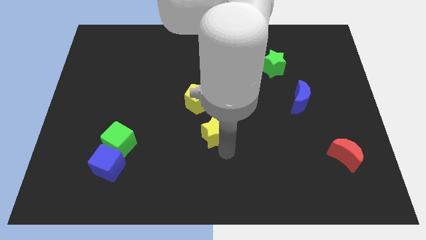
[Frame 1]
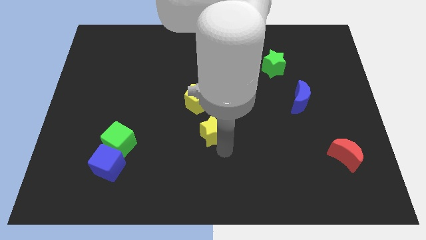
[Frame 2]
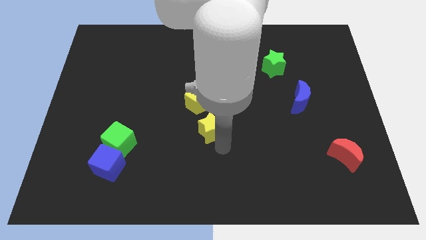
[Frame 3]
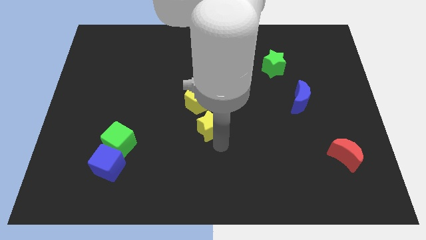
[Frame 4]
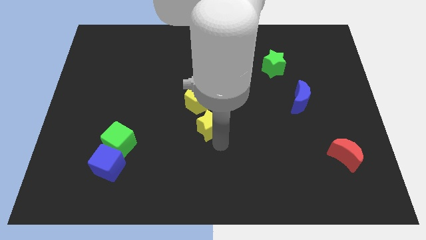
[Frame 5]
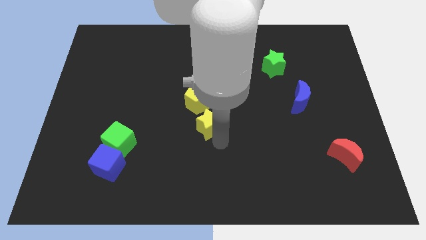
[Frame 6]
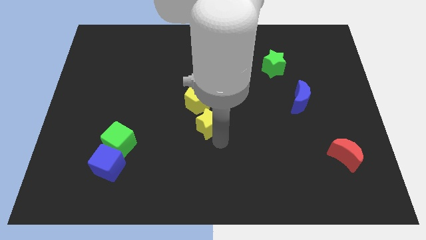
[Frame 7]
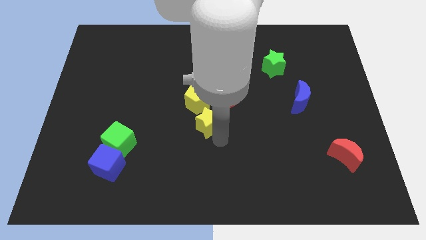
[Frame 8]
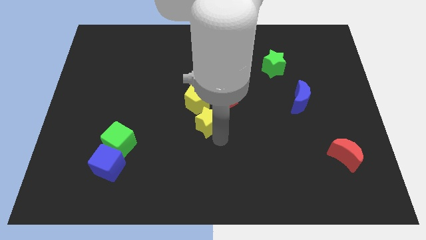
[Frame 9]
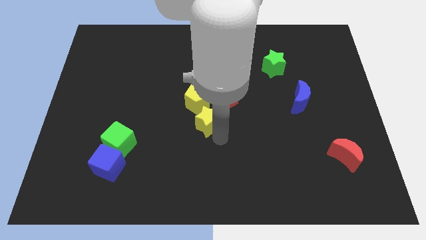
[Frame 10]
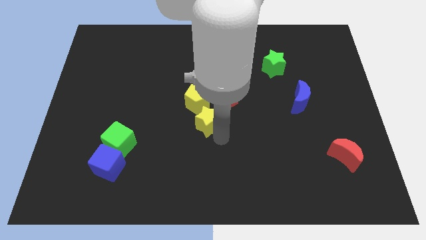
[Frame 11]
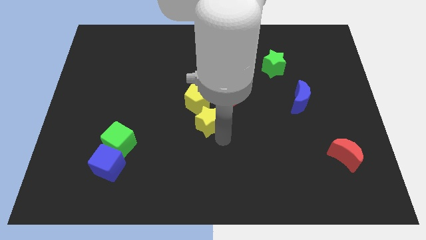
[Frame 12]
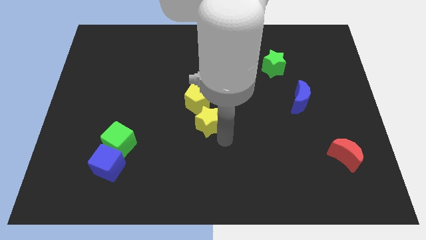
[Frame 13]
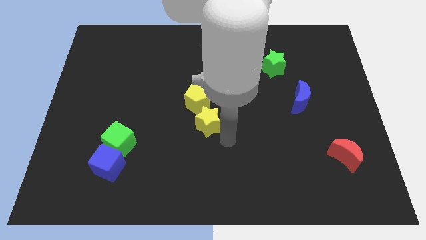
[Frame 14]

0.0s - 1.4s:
place yellow star to the bottom of yellow pentagon

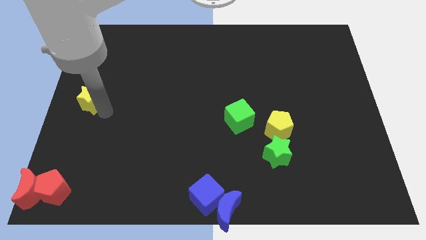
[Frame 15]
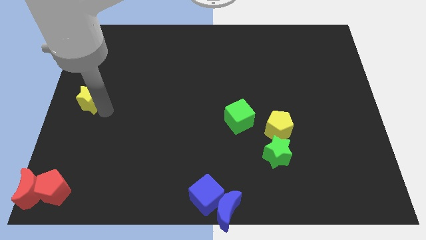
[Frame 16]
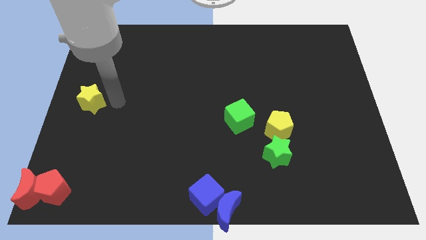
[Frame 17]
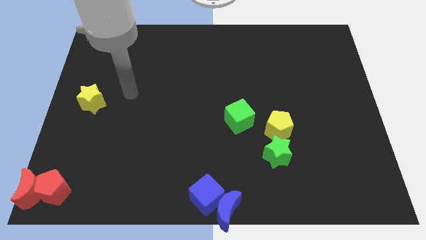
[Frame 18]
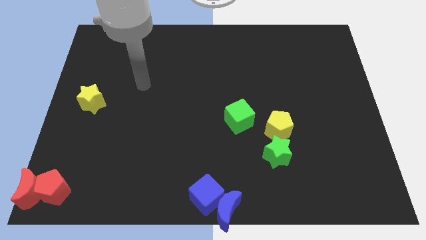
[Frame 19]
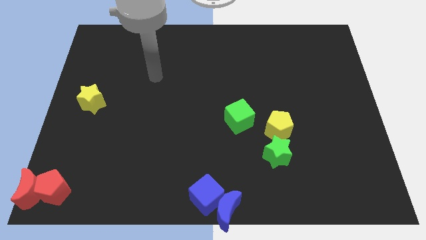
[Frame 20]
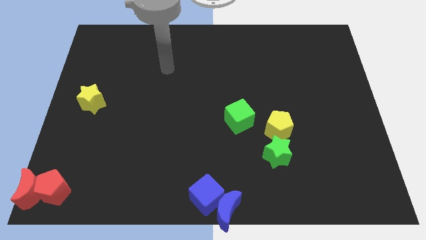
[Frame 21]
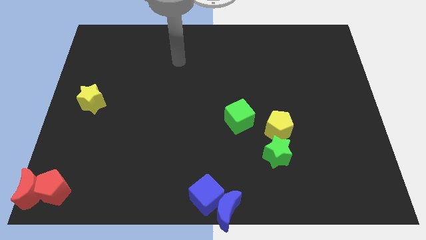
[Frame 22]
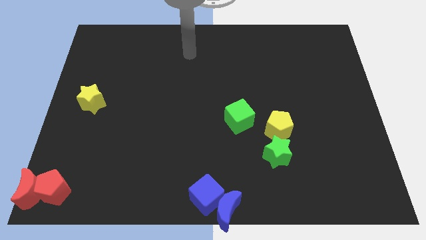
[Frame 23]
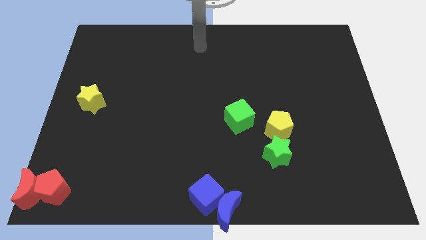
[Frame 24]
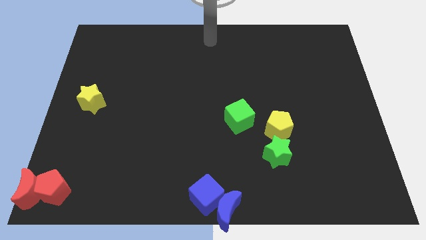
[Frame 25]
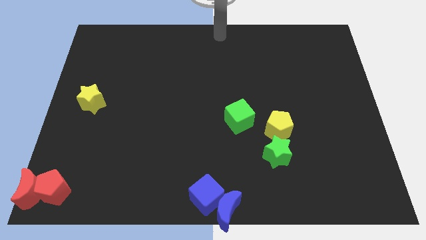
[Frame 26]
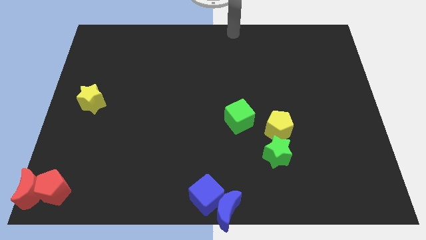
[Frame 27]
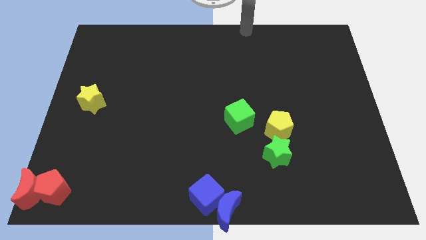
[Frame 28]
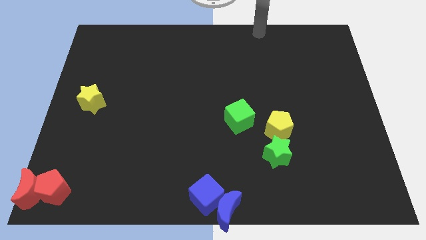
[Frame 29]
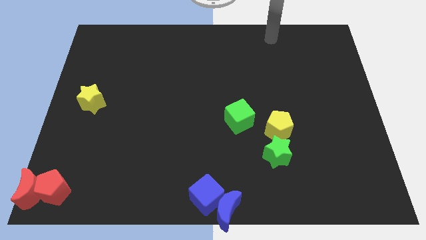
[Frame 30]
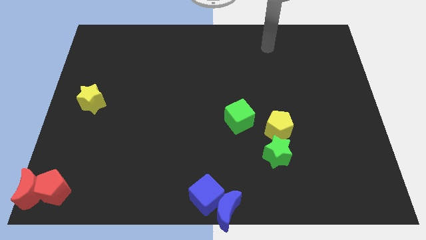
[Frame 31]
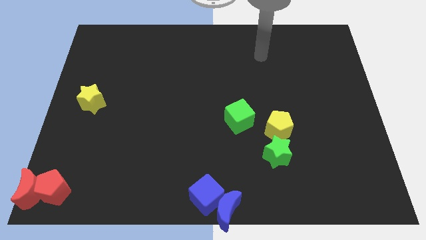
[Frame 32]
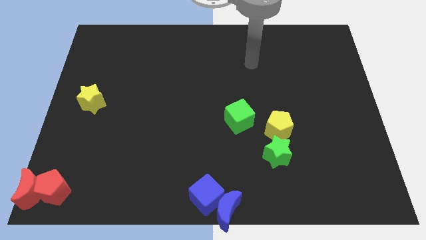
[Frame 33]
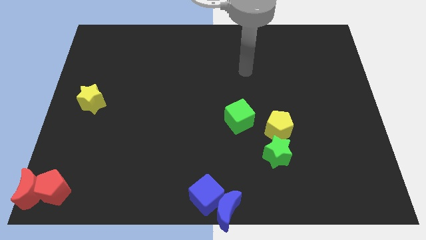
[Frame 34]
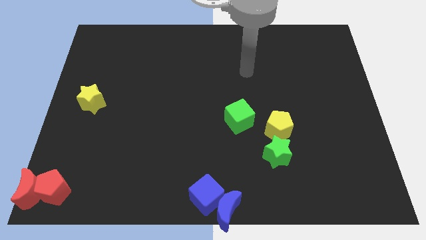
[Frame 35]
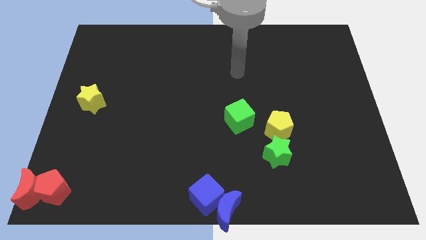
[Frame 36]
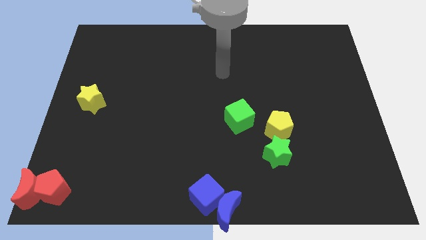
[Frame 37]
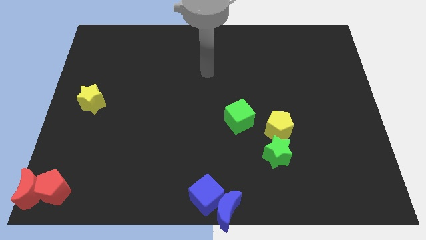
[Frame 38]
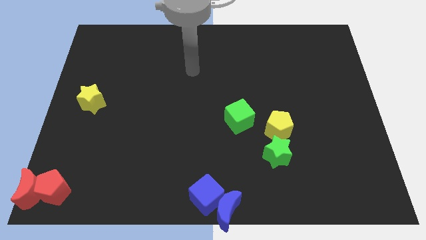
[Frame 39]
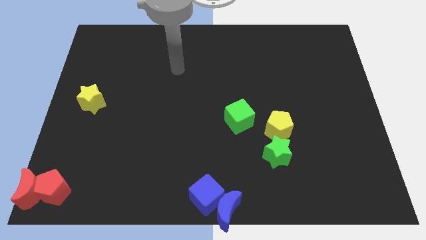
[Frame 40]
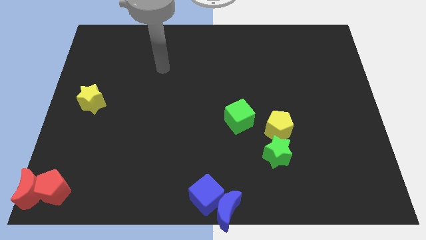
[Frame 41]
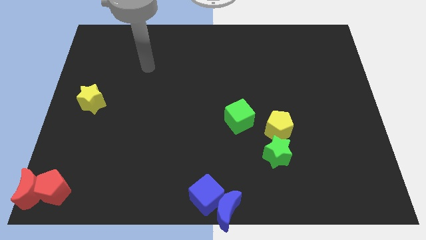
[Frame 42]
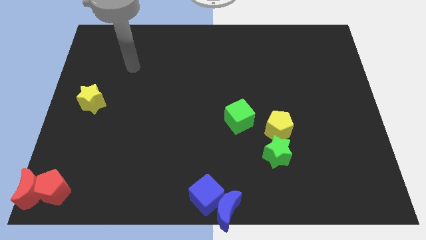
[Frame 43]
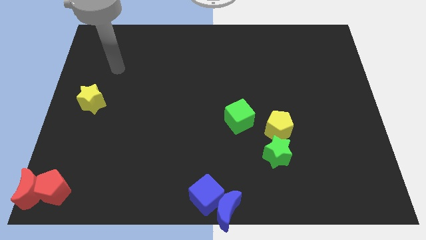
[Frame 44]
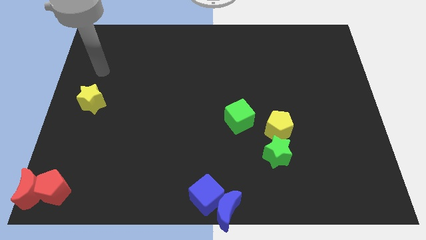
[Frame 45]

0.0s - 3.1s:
point your arm on top of the yellow star

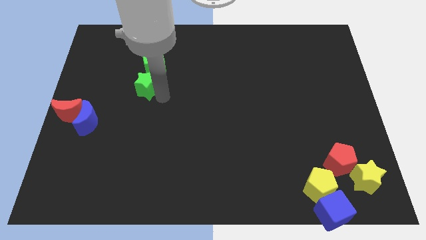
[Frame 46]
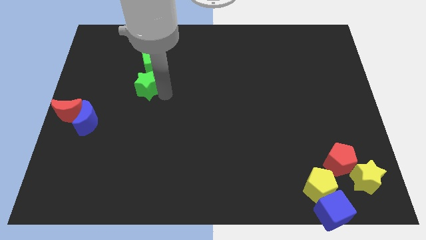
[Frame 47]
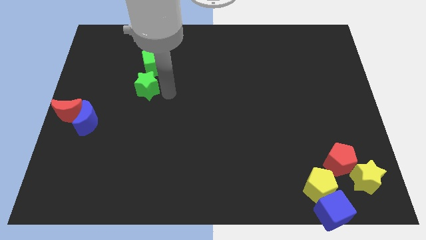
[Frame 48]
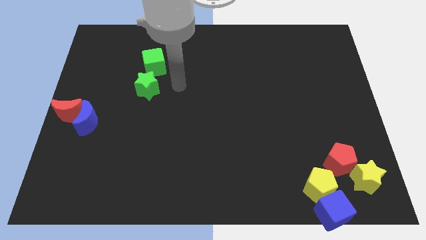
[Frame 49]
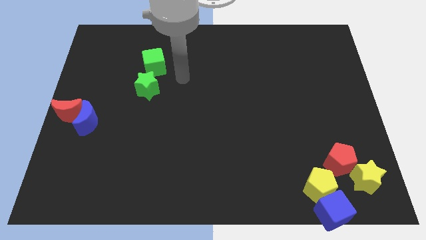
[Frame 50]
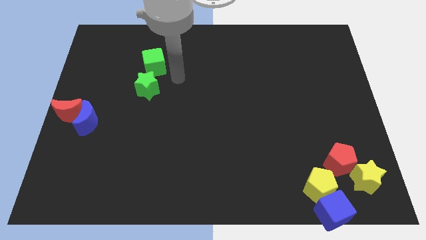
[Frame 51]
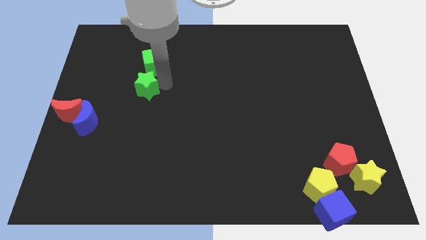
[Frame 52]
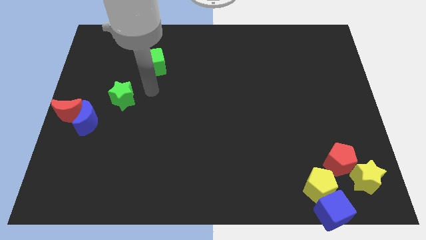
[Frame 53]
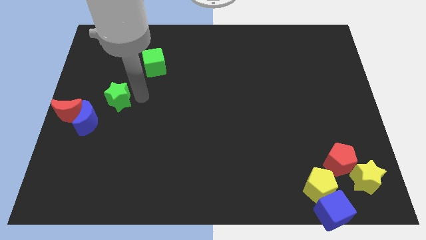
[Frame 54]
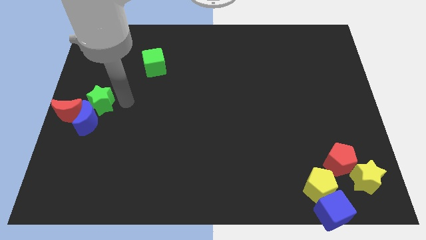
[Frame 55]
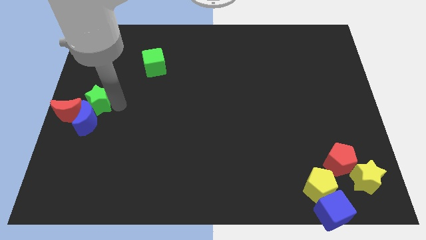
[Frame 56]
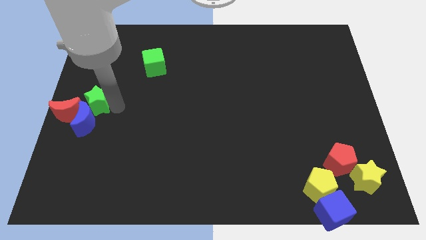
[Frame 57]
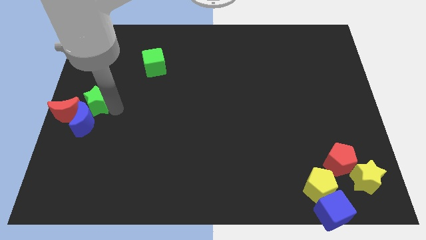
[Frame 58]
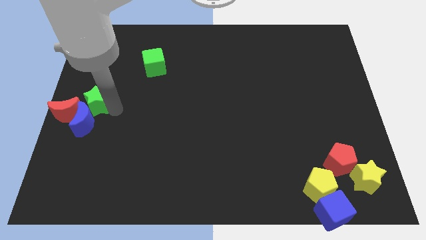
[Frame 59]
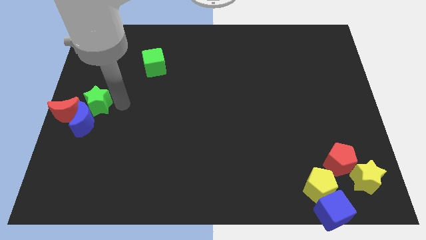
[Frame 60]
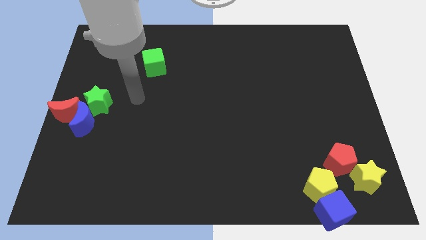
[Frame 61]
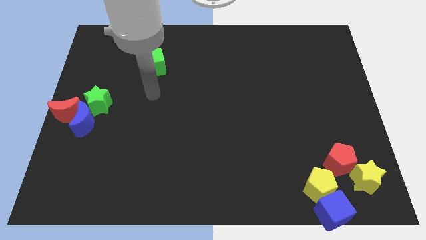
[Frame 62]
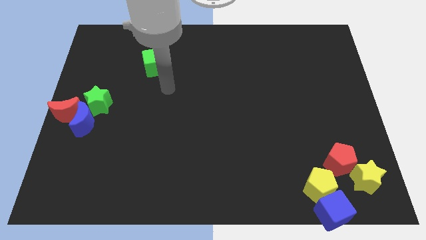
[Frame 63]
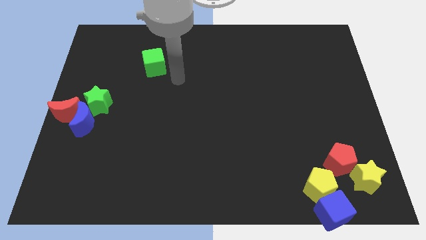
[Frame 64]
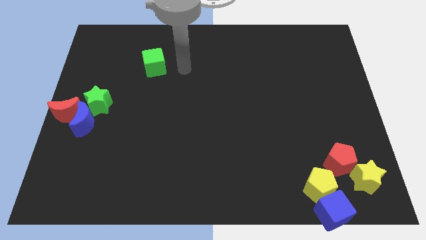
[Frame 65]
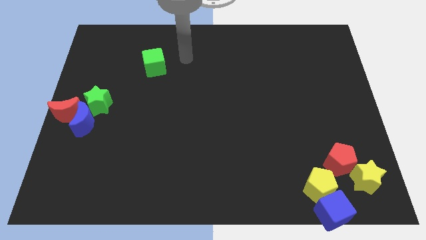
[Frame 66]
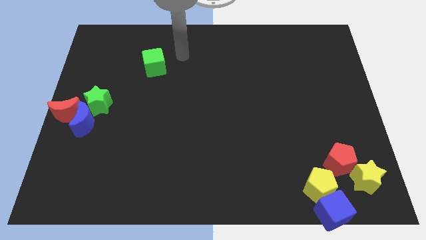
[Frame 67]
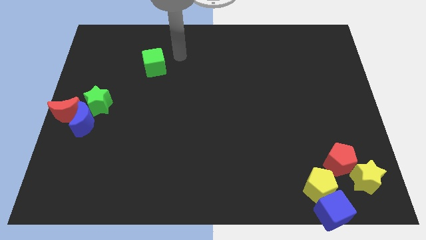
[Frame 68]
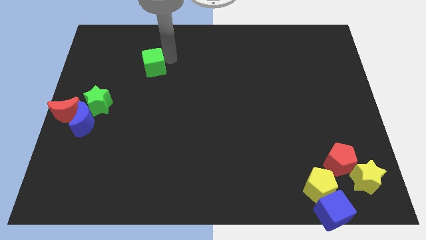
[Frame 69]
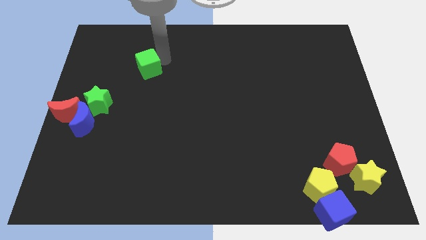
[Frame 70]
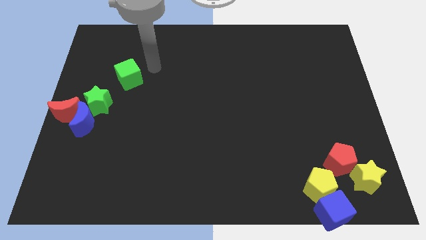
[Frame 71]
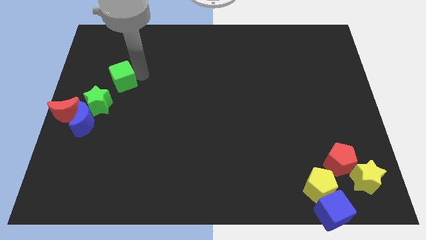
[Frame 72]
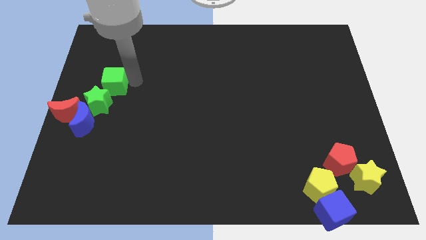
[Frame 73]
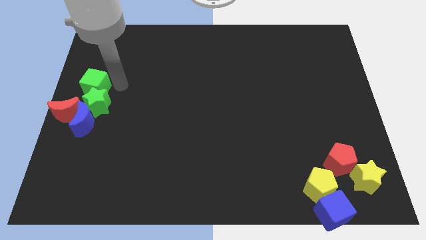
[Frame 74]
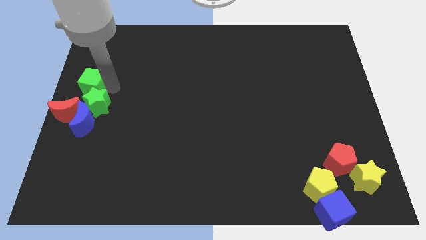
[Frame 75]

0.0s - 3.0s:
move the green blocks to the middle left of the board

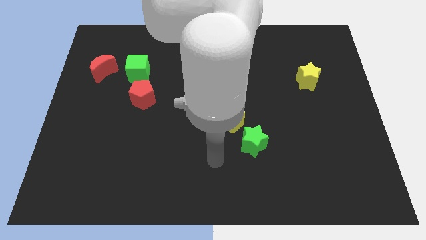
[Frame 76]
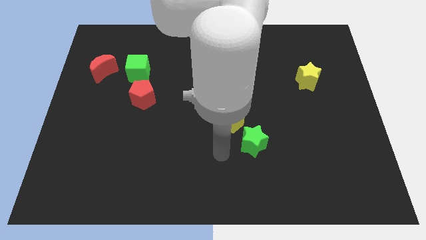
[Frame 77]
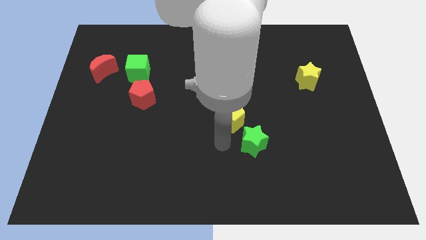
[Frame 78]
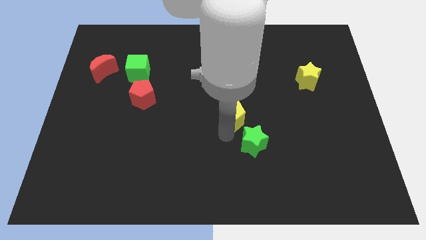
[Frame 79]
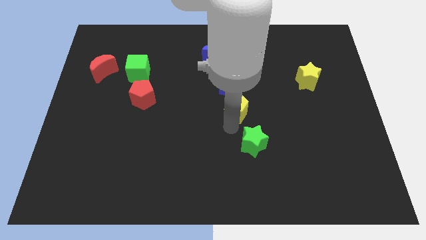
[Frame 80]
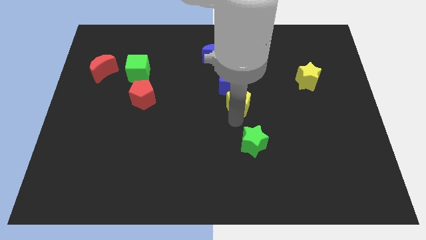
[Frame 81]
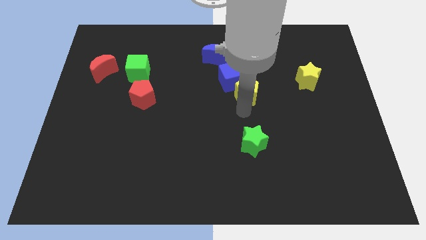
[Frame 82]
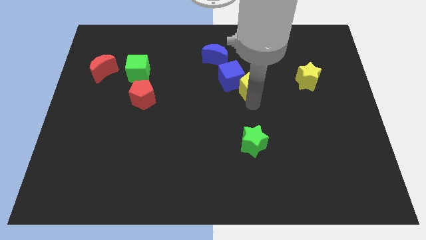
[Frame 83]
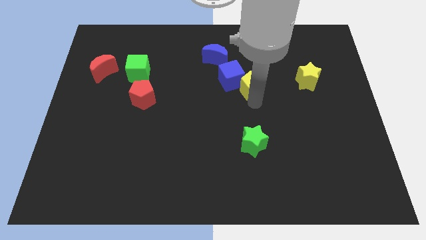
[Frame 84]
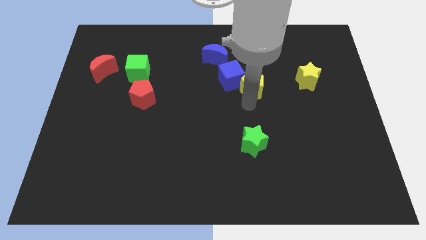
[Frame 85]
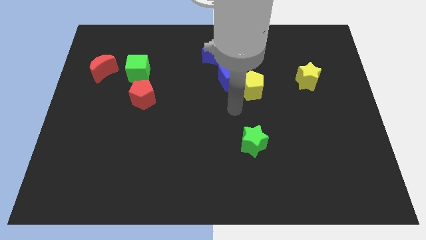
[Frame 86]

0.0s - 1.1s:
push the yellow pentagon into the blue cube

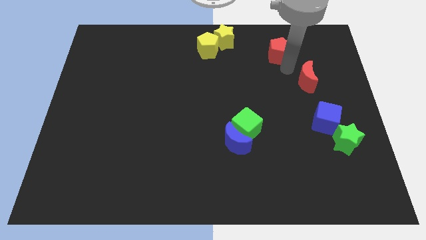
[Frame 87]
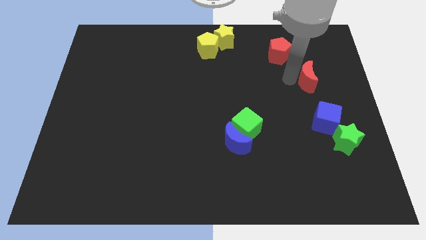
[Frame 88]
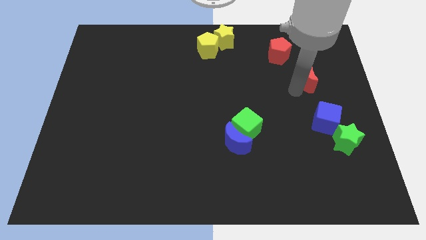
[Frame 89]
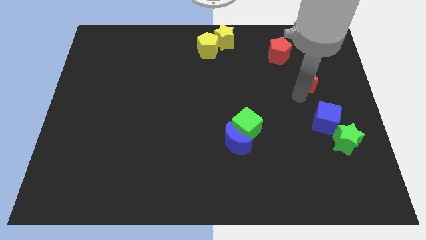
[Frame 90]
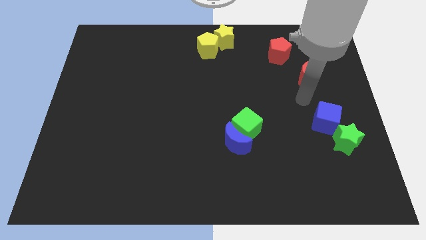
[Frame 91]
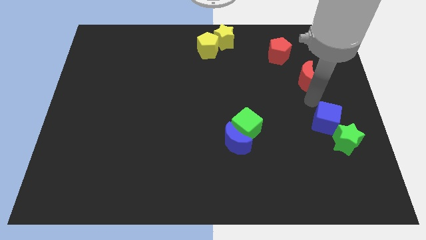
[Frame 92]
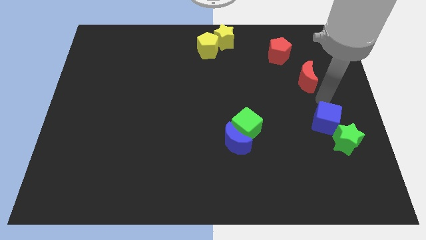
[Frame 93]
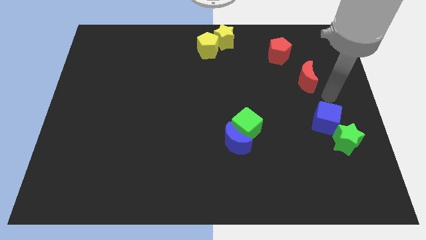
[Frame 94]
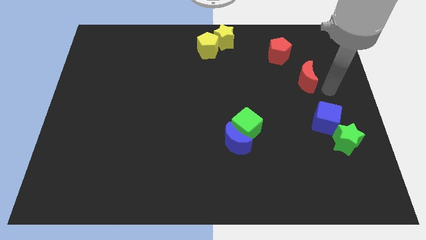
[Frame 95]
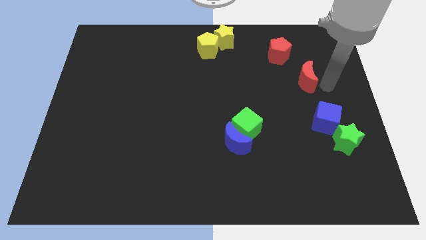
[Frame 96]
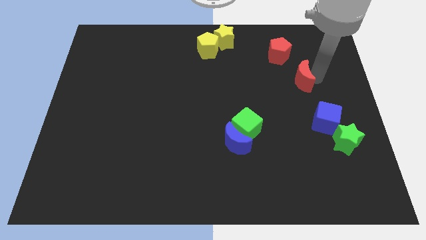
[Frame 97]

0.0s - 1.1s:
point your arm to the right side of red moon
